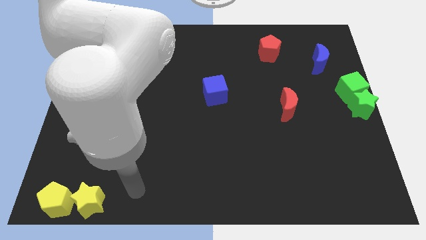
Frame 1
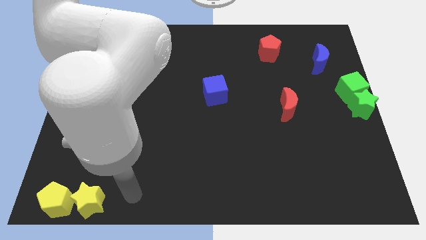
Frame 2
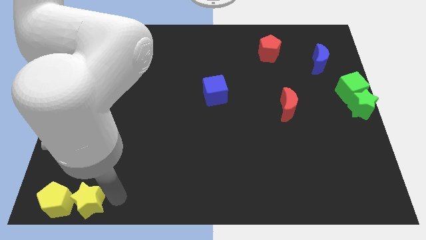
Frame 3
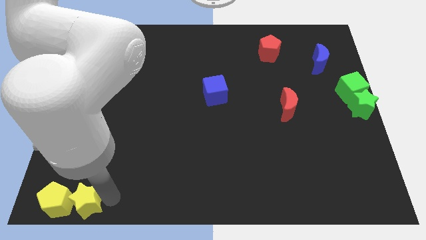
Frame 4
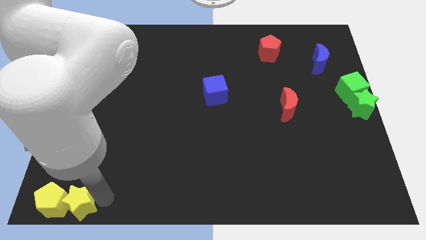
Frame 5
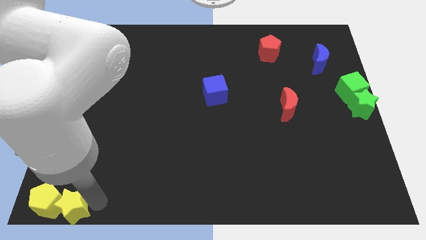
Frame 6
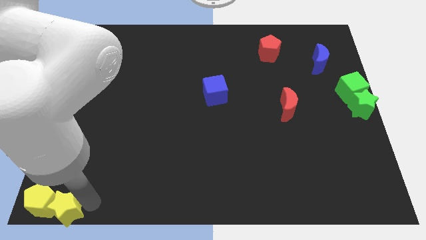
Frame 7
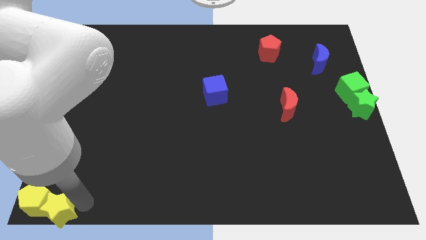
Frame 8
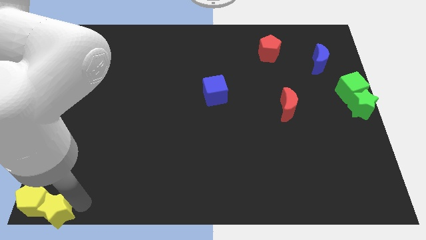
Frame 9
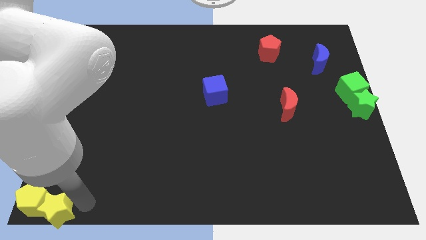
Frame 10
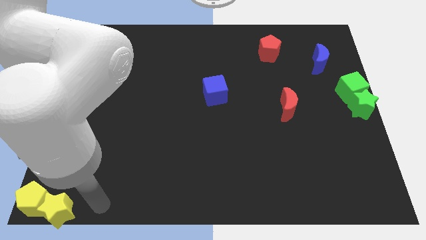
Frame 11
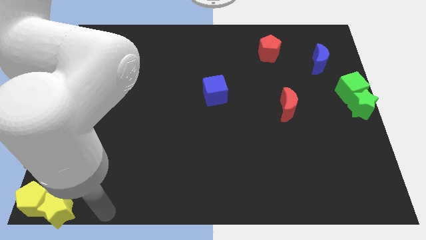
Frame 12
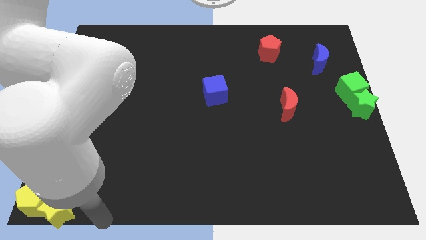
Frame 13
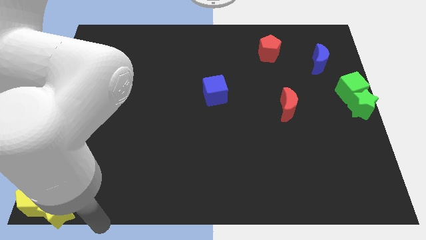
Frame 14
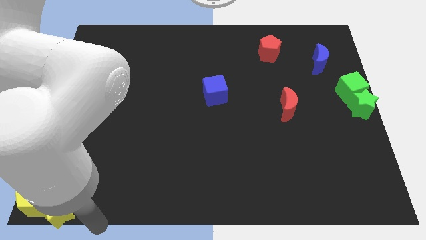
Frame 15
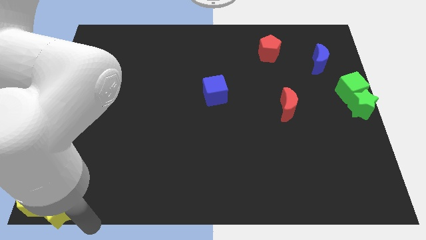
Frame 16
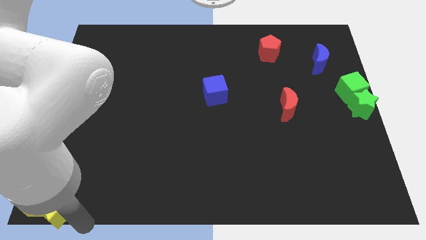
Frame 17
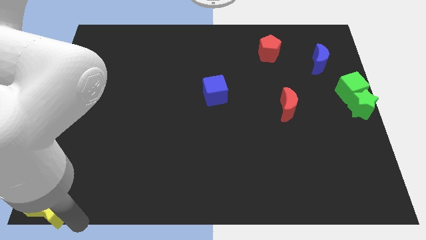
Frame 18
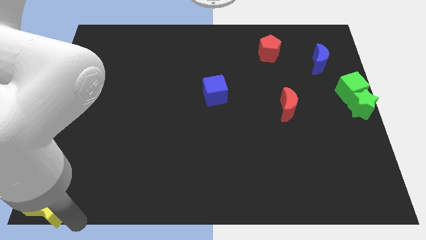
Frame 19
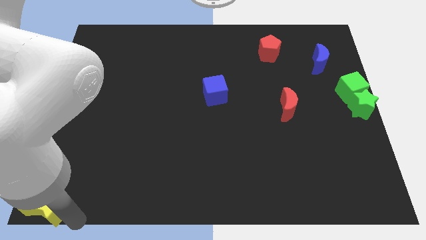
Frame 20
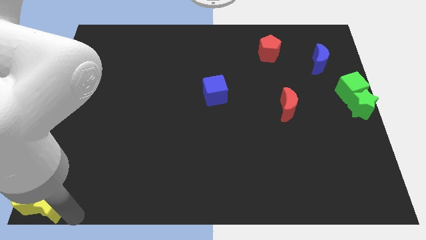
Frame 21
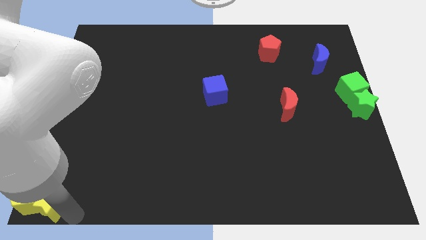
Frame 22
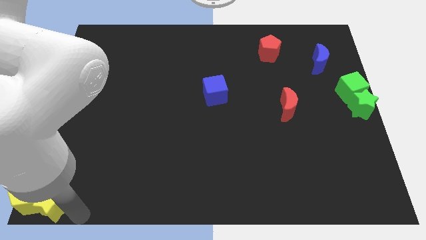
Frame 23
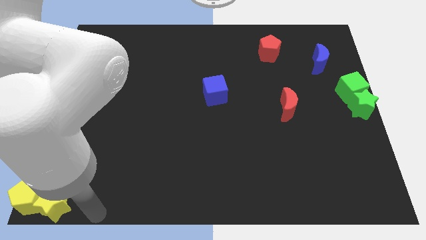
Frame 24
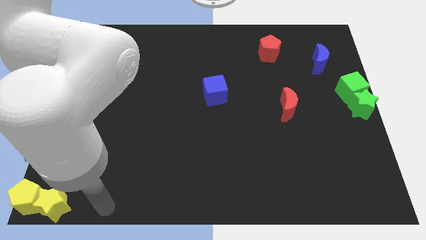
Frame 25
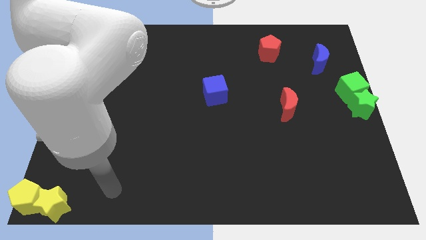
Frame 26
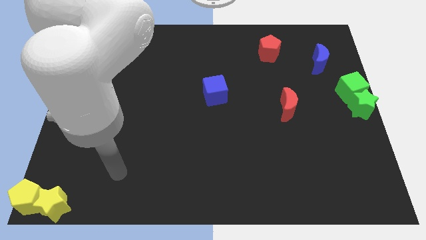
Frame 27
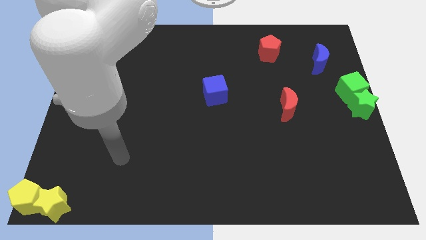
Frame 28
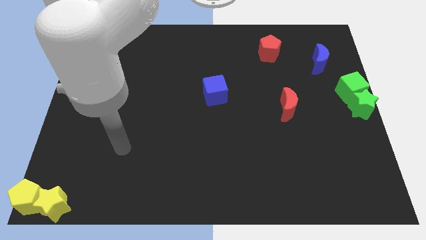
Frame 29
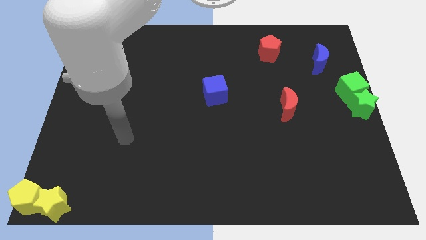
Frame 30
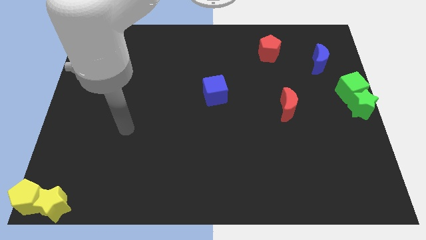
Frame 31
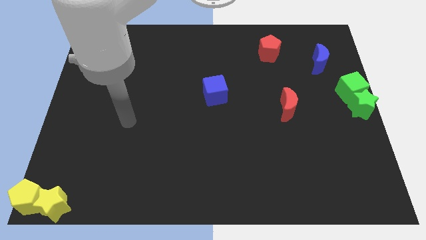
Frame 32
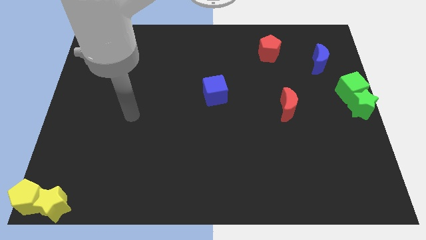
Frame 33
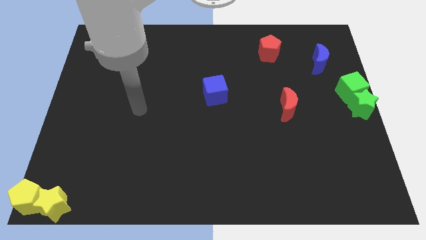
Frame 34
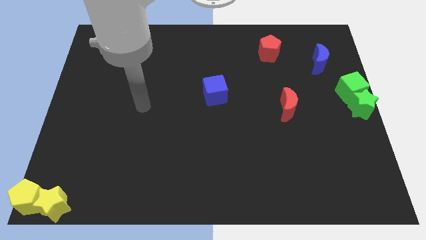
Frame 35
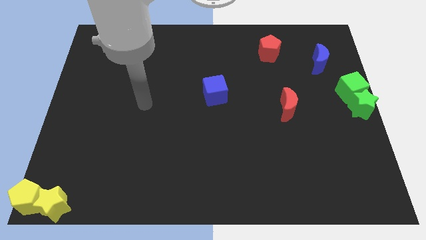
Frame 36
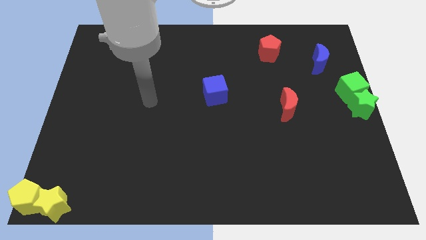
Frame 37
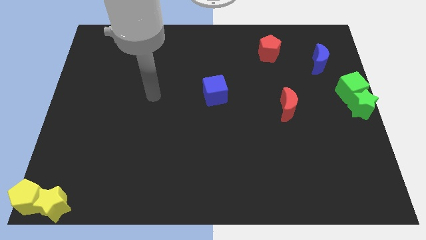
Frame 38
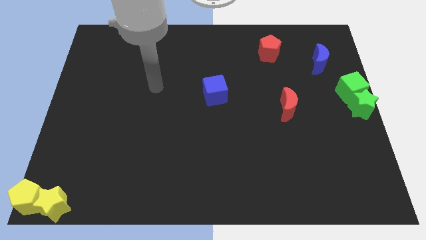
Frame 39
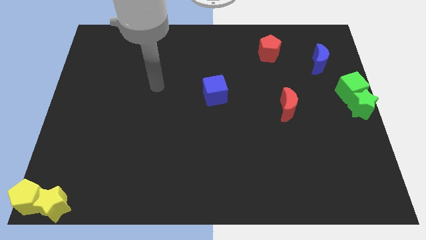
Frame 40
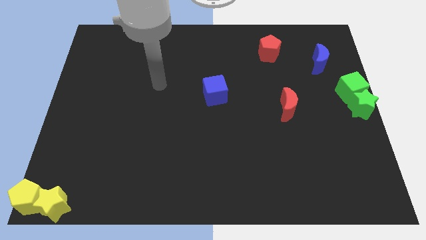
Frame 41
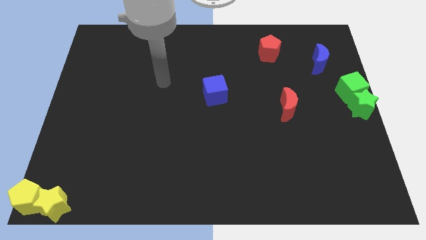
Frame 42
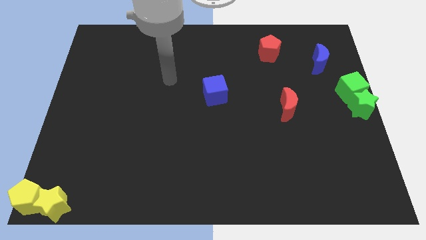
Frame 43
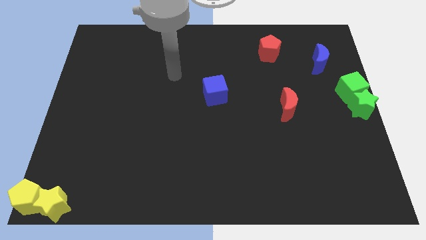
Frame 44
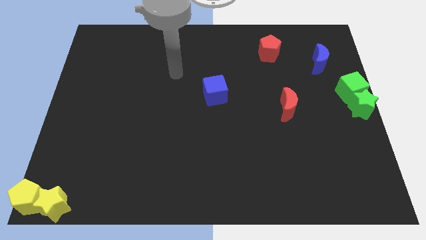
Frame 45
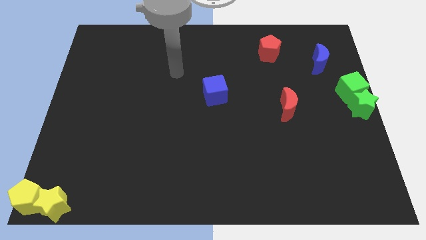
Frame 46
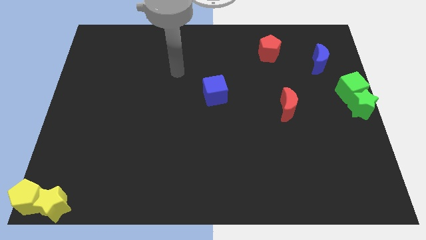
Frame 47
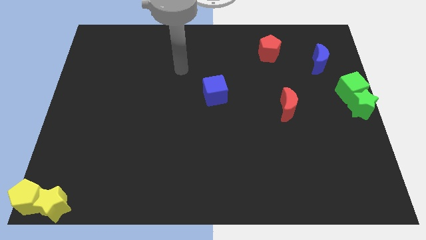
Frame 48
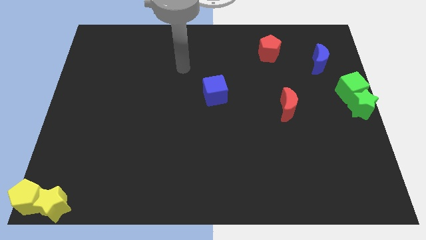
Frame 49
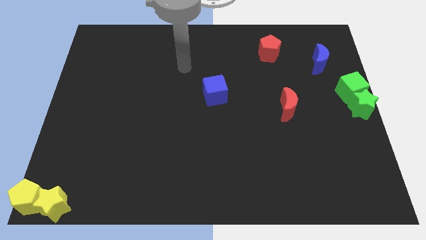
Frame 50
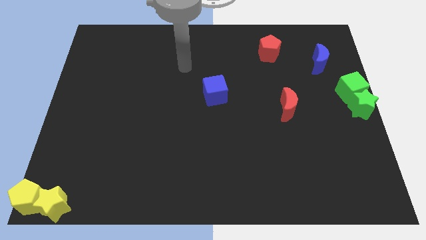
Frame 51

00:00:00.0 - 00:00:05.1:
push the yellow pentagonyellow star towards the bottom left corner of the board

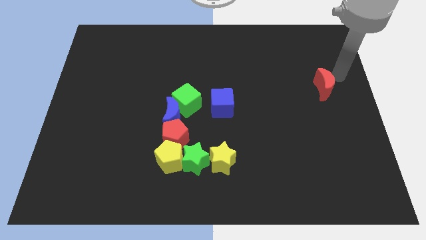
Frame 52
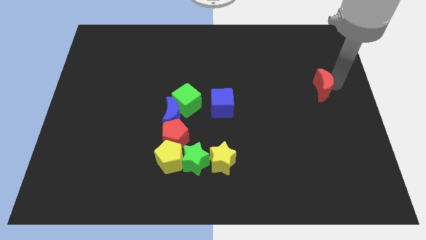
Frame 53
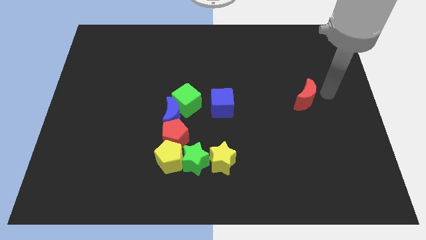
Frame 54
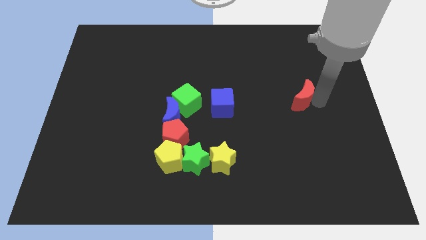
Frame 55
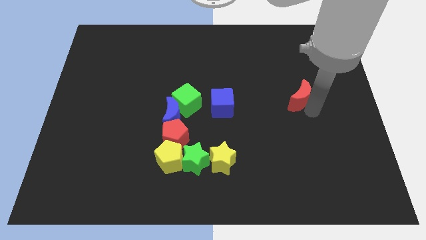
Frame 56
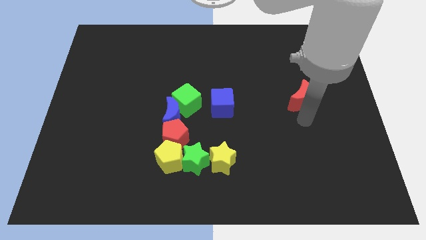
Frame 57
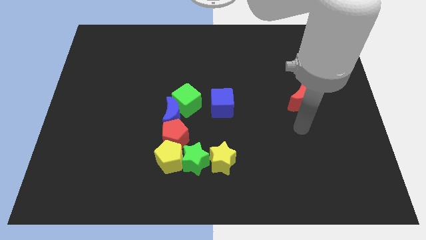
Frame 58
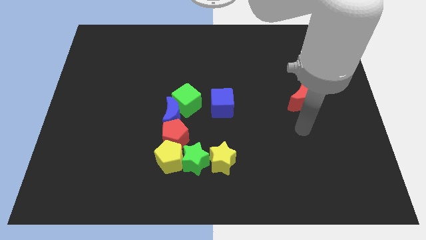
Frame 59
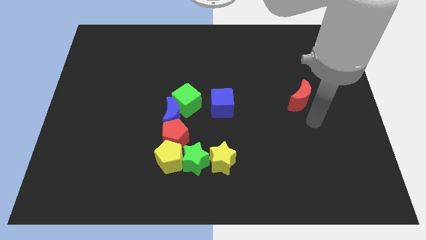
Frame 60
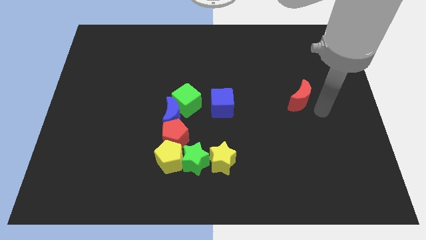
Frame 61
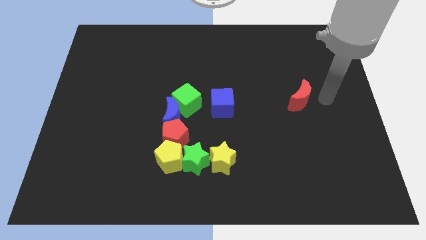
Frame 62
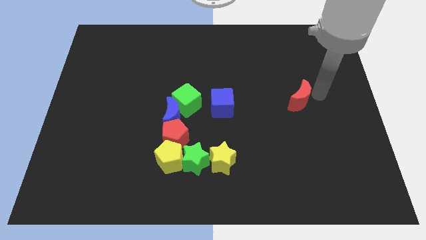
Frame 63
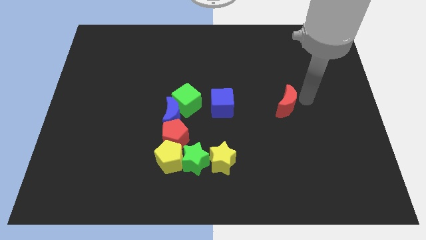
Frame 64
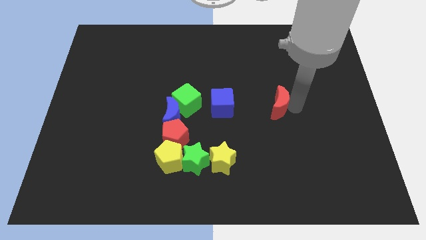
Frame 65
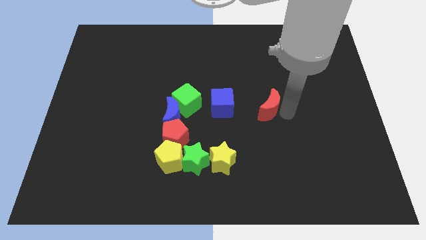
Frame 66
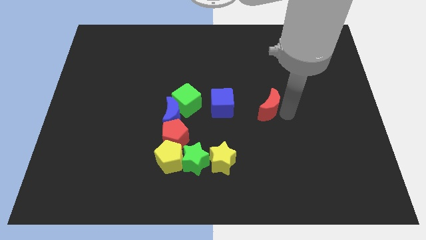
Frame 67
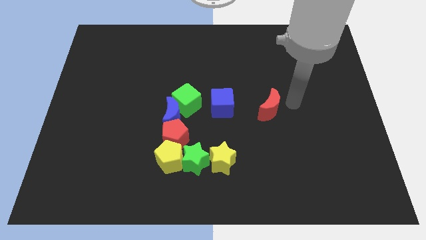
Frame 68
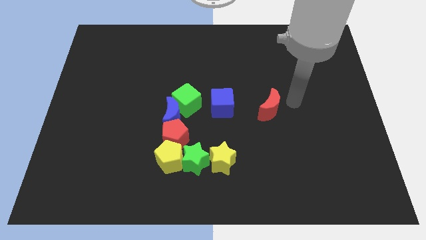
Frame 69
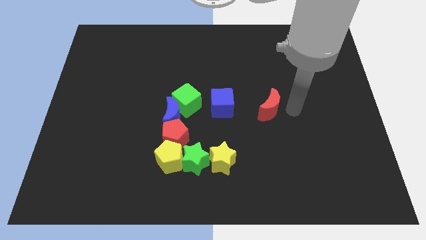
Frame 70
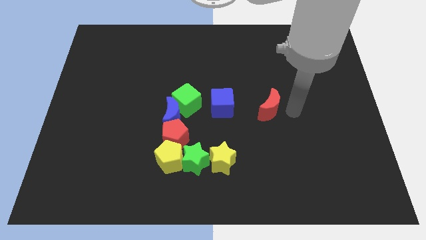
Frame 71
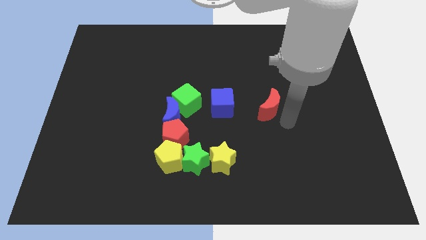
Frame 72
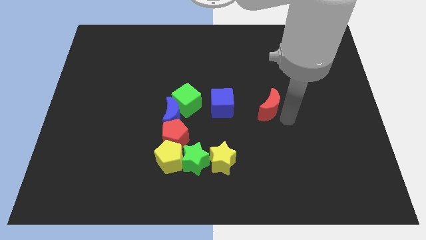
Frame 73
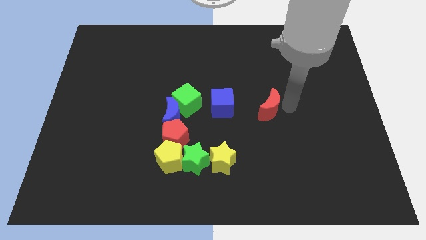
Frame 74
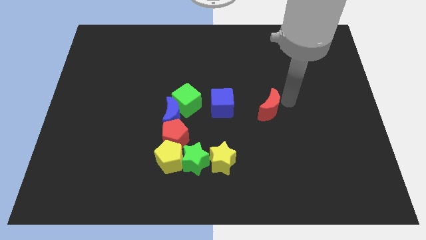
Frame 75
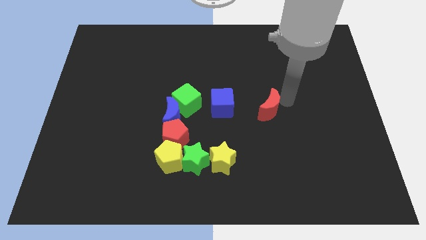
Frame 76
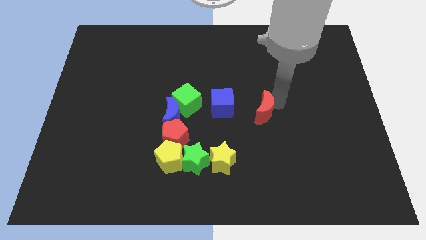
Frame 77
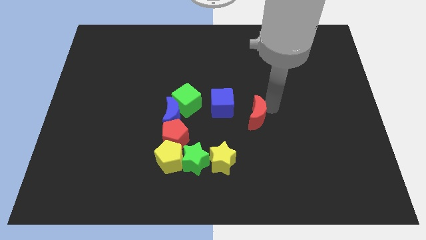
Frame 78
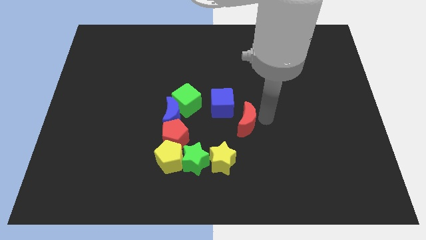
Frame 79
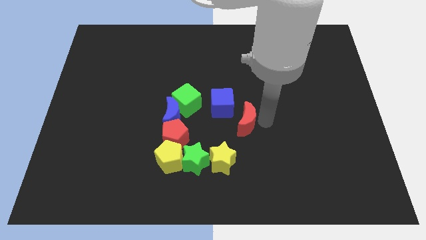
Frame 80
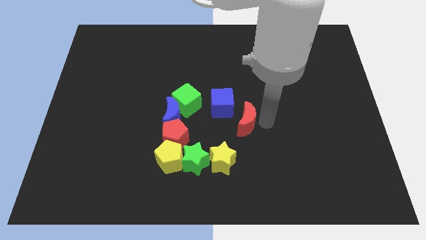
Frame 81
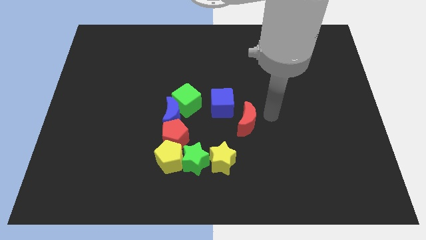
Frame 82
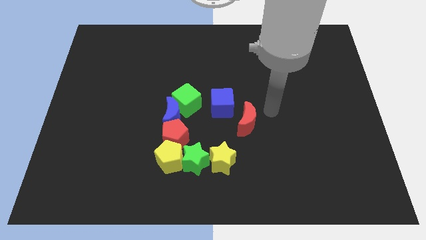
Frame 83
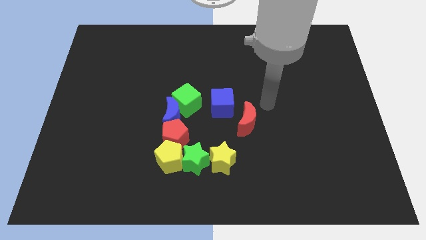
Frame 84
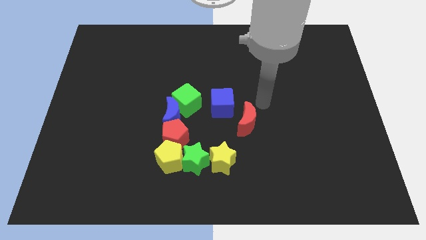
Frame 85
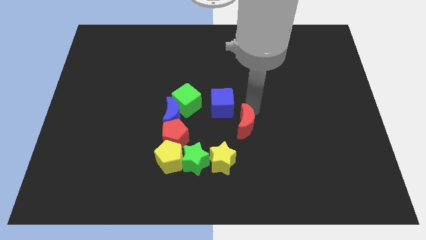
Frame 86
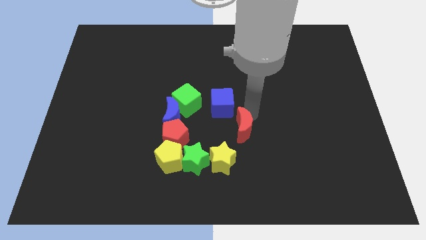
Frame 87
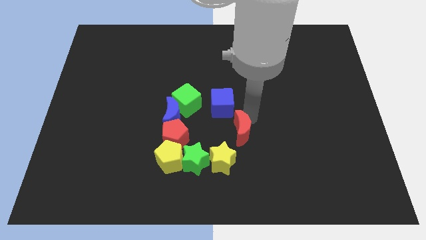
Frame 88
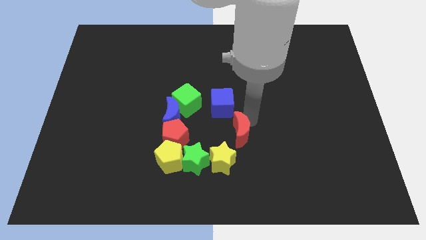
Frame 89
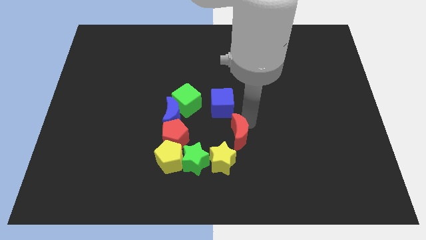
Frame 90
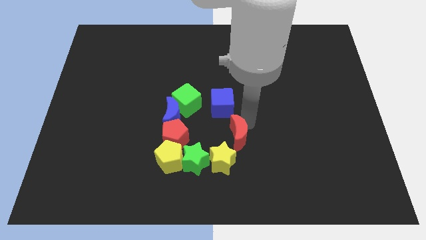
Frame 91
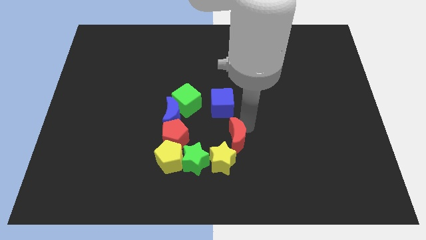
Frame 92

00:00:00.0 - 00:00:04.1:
push red moon into yellow star
